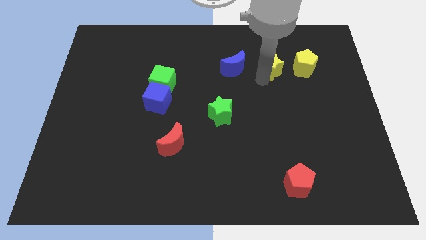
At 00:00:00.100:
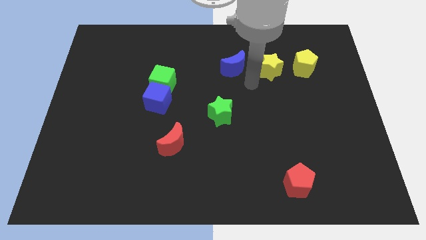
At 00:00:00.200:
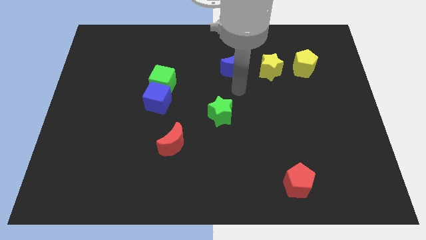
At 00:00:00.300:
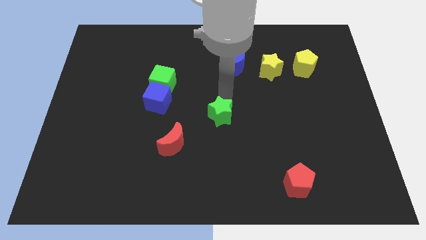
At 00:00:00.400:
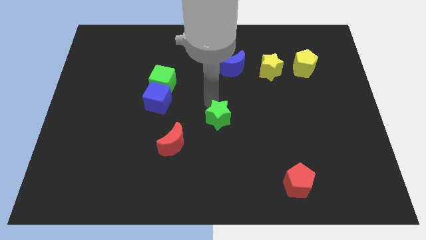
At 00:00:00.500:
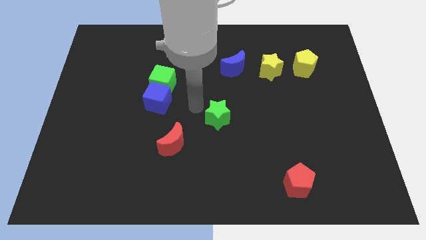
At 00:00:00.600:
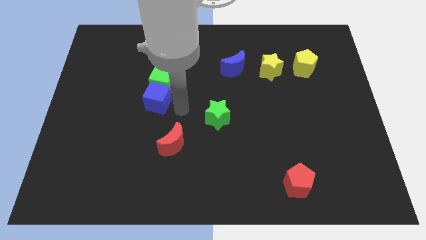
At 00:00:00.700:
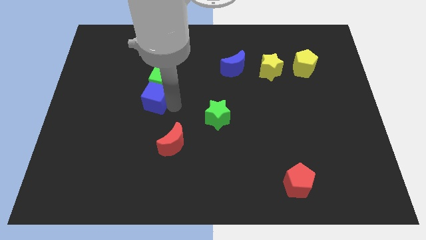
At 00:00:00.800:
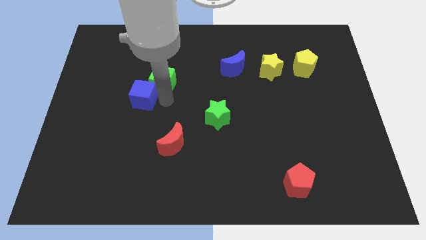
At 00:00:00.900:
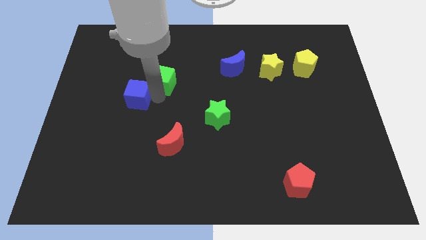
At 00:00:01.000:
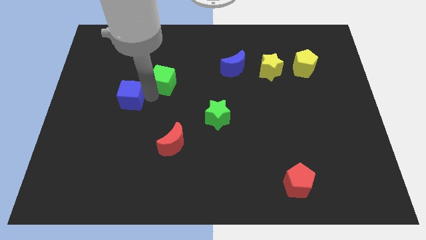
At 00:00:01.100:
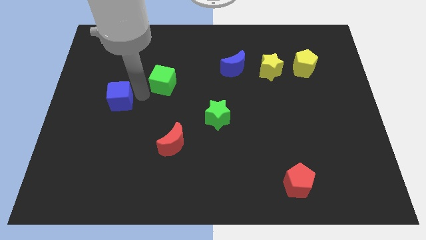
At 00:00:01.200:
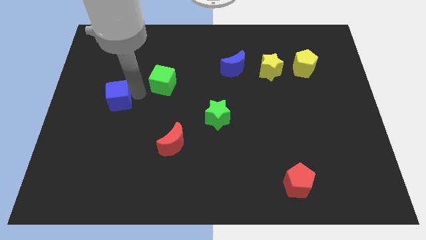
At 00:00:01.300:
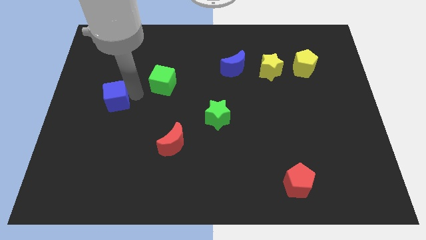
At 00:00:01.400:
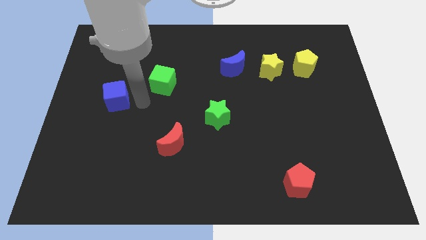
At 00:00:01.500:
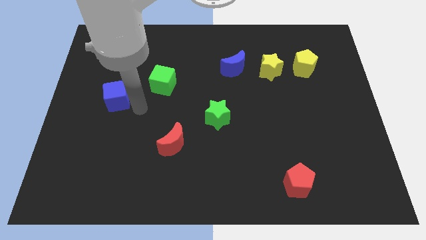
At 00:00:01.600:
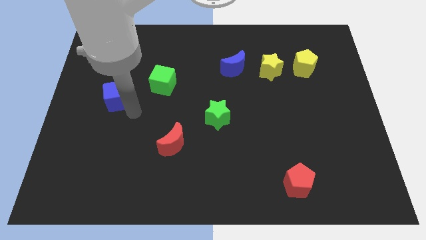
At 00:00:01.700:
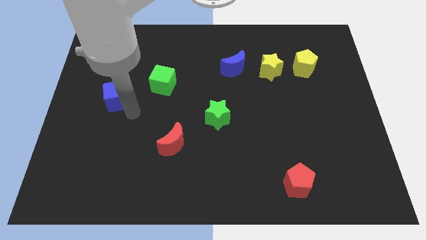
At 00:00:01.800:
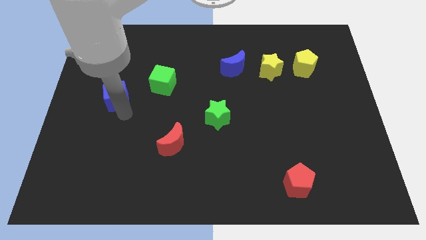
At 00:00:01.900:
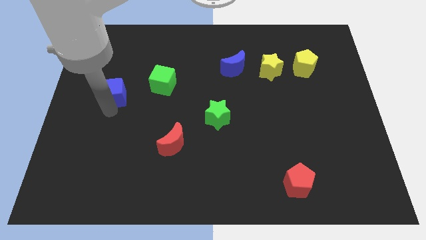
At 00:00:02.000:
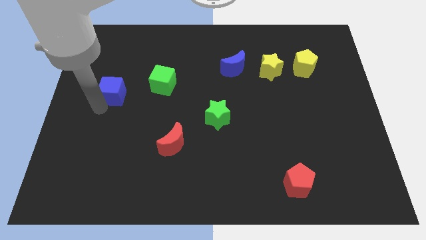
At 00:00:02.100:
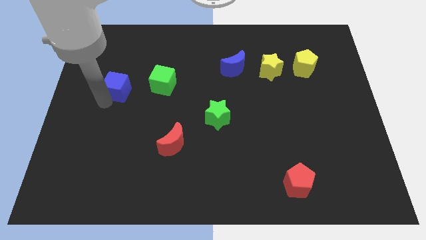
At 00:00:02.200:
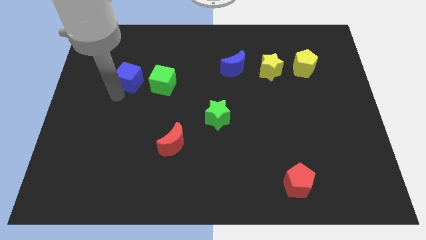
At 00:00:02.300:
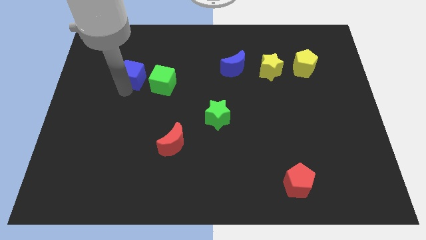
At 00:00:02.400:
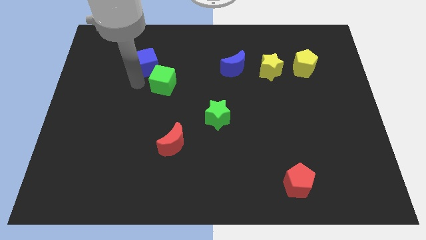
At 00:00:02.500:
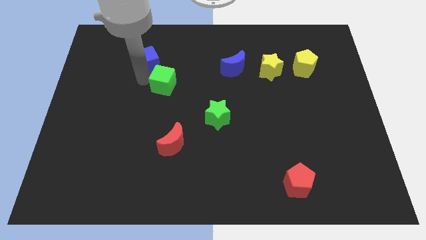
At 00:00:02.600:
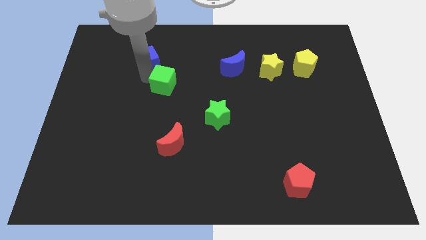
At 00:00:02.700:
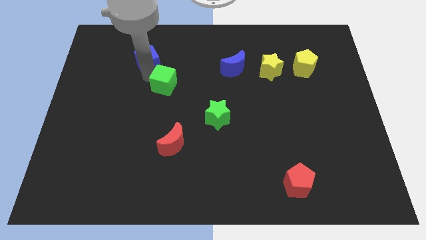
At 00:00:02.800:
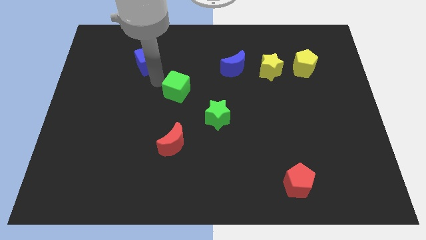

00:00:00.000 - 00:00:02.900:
place blue cube diagonally towards above green cube

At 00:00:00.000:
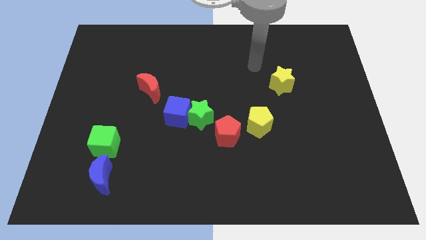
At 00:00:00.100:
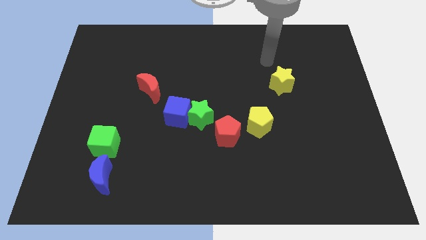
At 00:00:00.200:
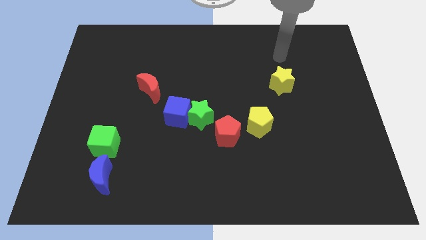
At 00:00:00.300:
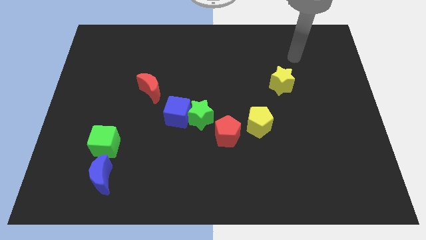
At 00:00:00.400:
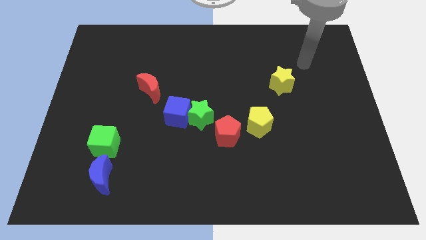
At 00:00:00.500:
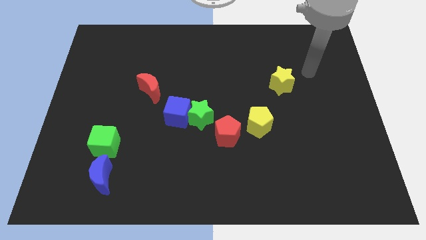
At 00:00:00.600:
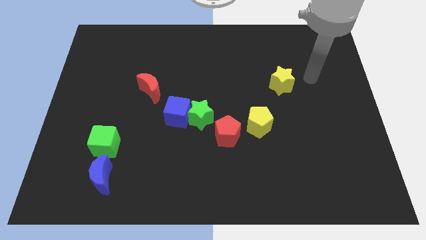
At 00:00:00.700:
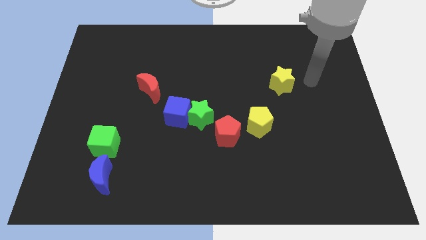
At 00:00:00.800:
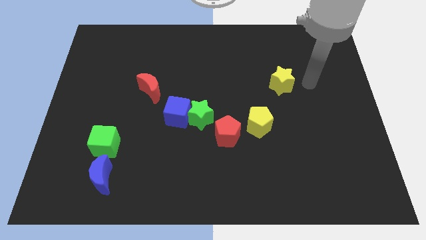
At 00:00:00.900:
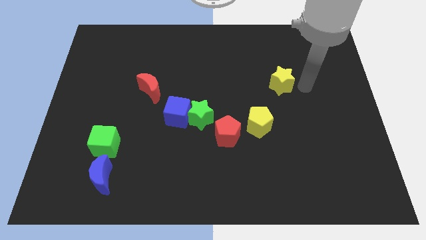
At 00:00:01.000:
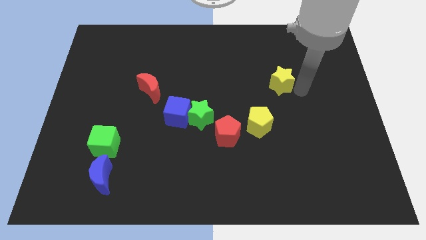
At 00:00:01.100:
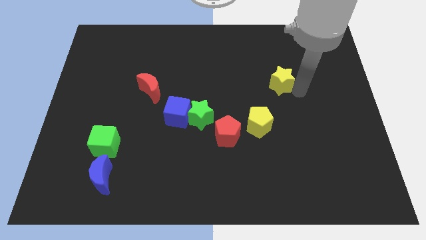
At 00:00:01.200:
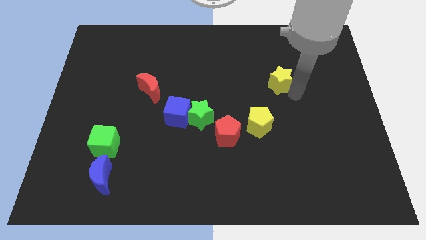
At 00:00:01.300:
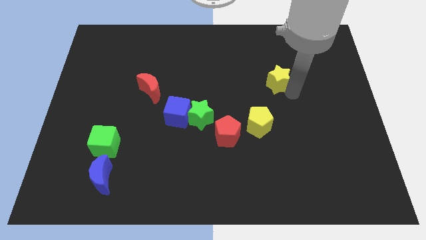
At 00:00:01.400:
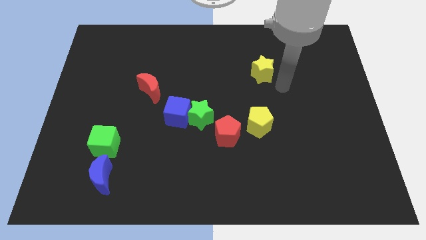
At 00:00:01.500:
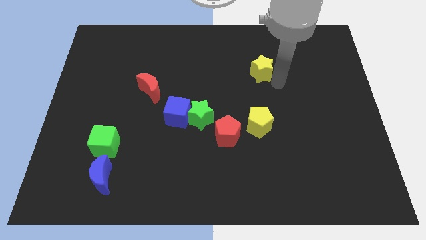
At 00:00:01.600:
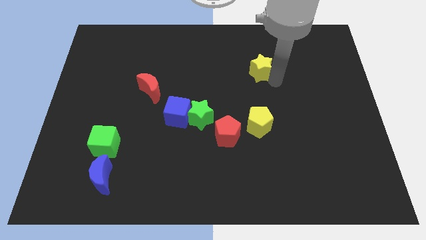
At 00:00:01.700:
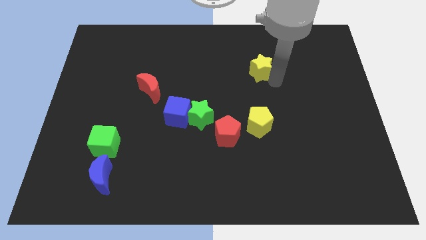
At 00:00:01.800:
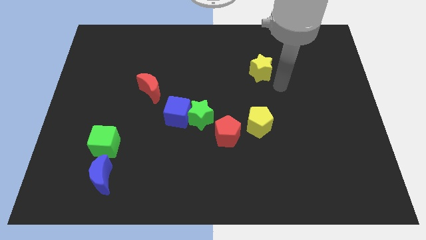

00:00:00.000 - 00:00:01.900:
place the yellow star vertically above the yellow pentagon

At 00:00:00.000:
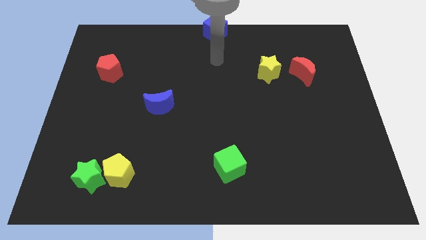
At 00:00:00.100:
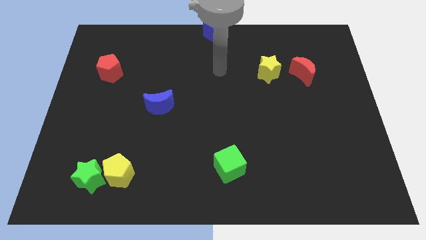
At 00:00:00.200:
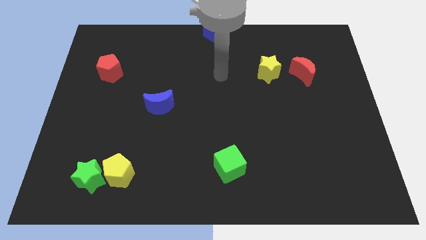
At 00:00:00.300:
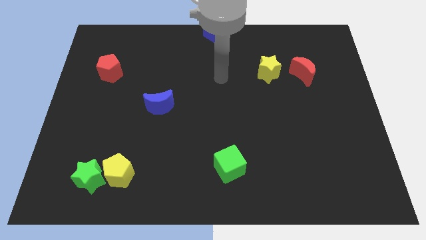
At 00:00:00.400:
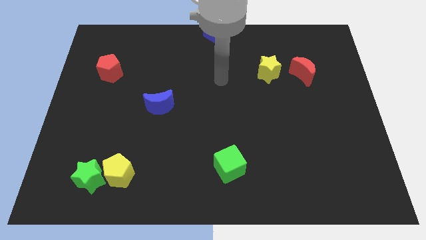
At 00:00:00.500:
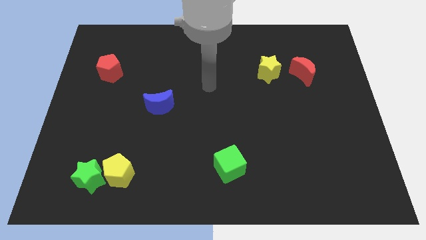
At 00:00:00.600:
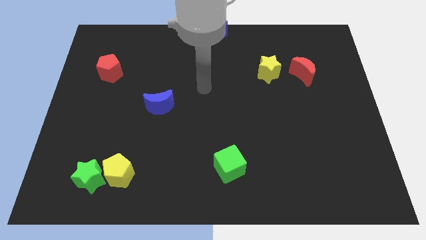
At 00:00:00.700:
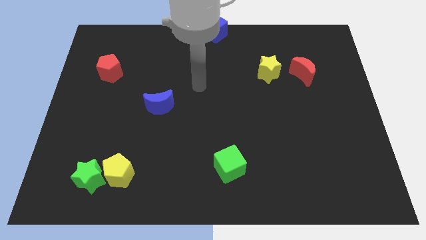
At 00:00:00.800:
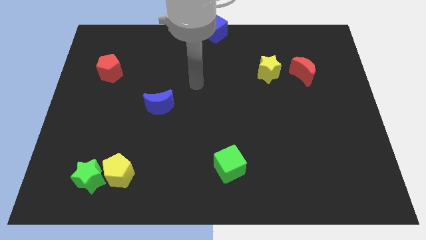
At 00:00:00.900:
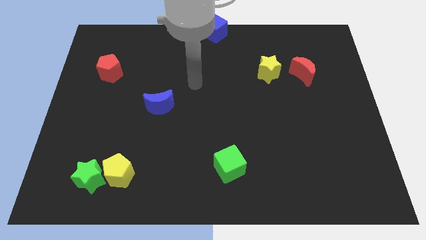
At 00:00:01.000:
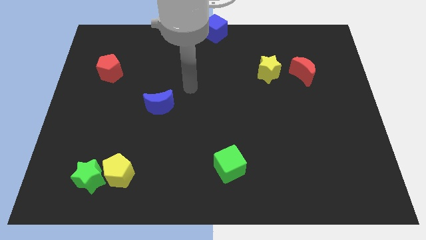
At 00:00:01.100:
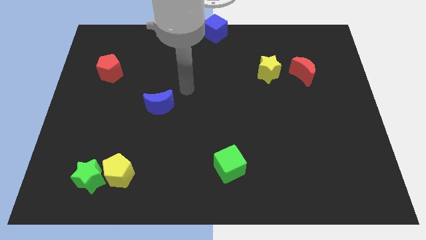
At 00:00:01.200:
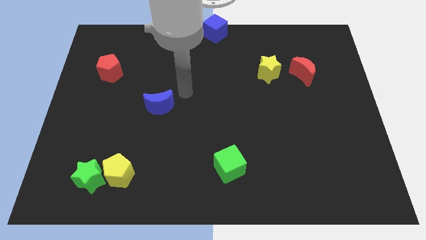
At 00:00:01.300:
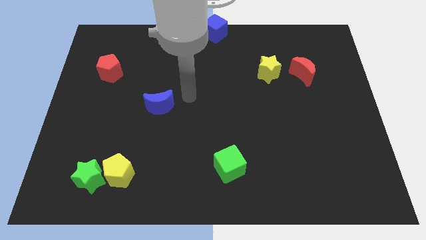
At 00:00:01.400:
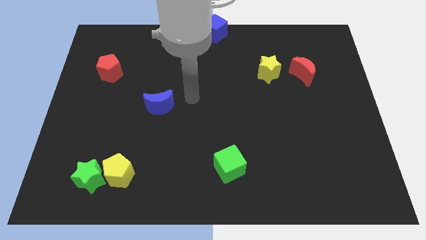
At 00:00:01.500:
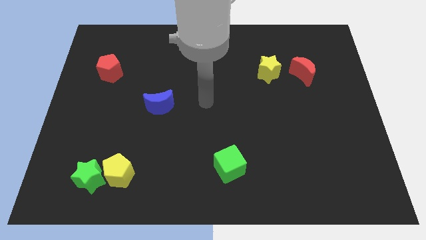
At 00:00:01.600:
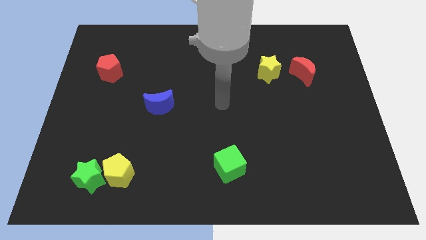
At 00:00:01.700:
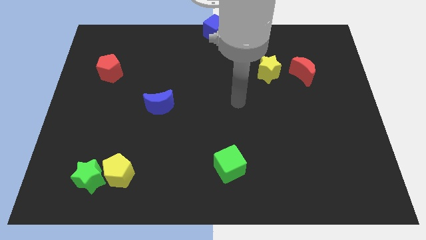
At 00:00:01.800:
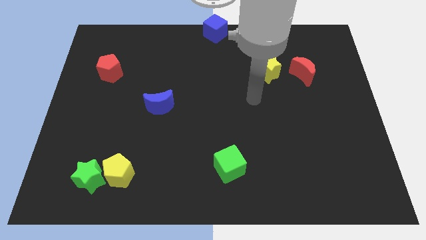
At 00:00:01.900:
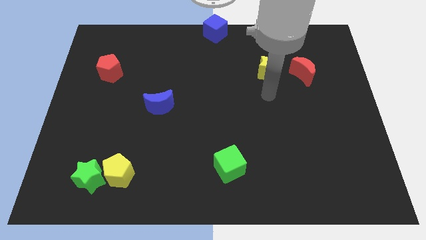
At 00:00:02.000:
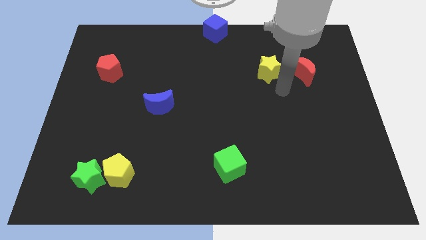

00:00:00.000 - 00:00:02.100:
point the arm below the yellow star

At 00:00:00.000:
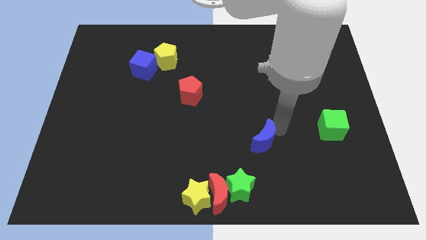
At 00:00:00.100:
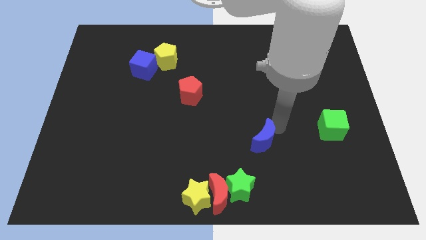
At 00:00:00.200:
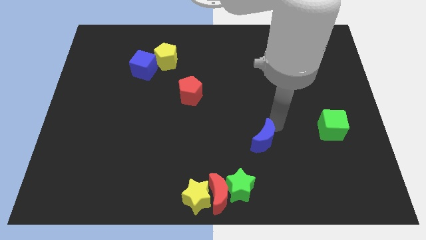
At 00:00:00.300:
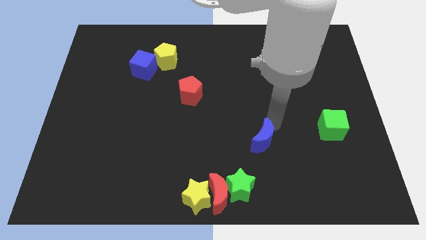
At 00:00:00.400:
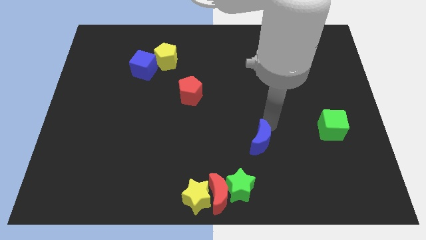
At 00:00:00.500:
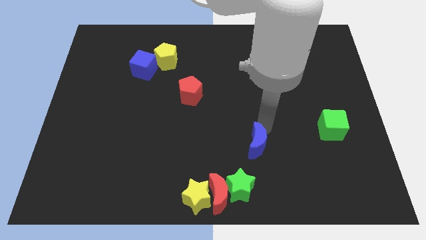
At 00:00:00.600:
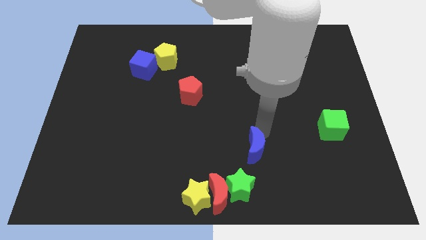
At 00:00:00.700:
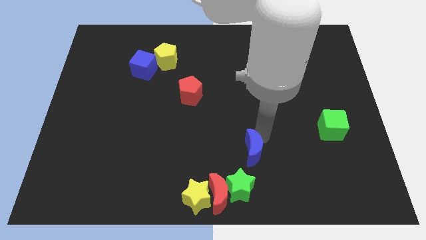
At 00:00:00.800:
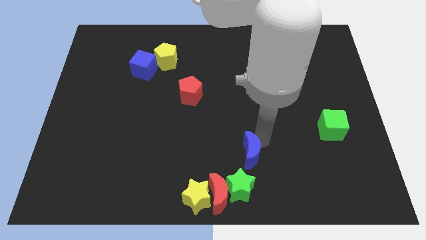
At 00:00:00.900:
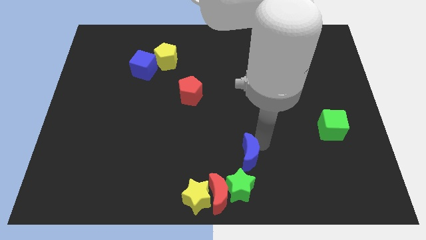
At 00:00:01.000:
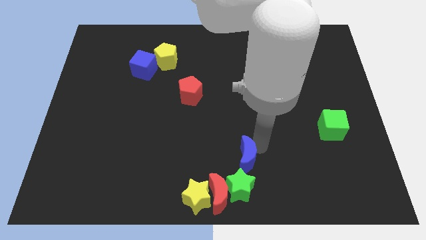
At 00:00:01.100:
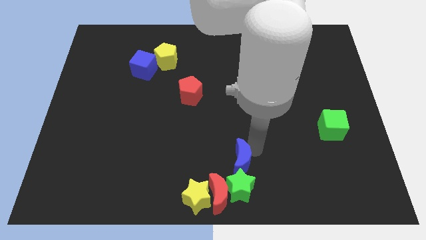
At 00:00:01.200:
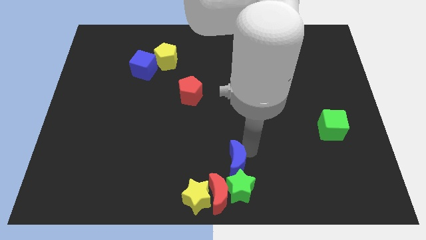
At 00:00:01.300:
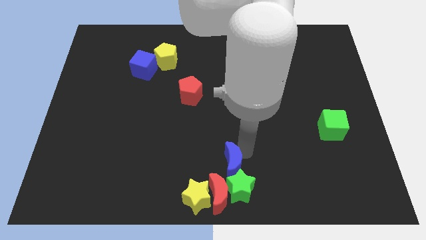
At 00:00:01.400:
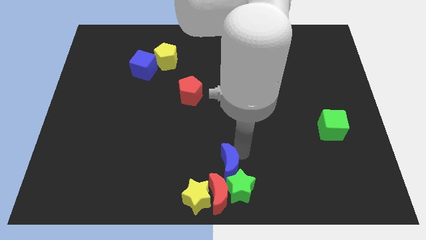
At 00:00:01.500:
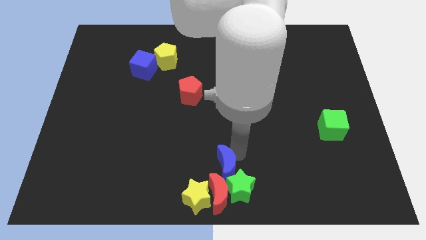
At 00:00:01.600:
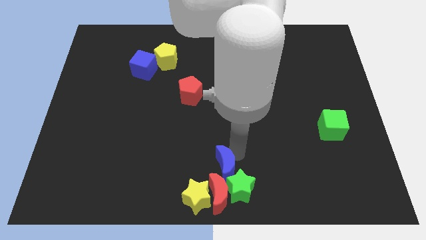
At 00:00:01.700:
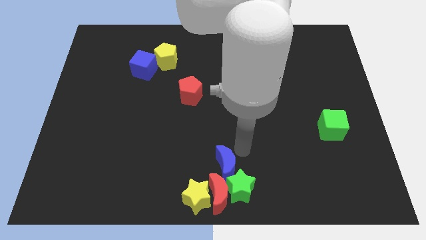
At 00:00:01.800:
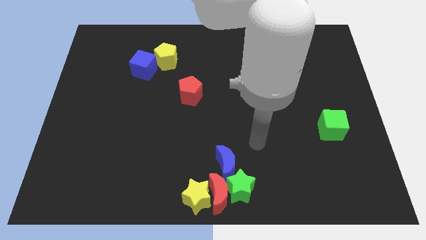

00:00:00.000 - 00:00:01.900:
place the blue crescent to the top side of the green star and the red moon
